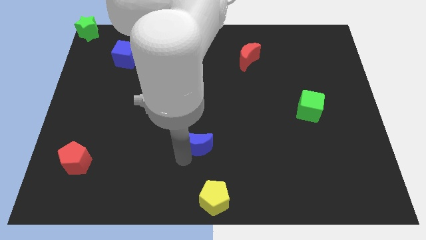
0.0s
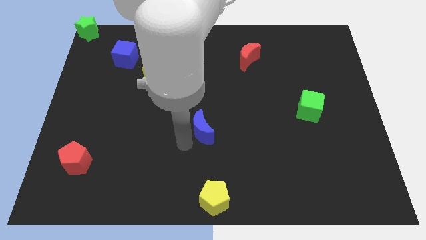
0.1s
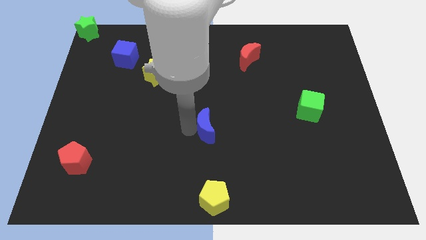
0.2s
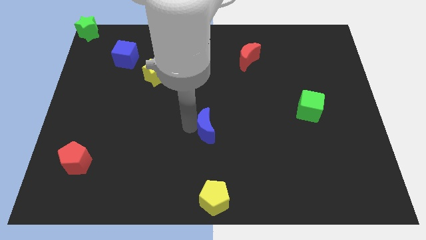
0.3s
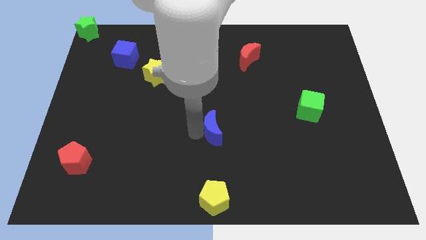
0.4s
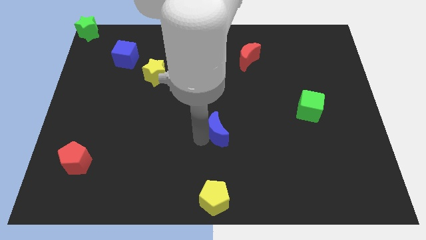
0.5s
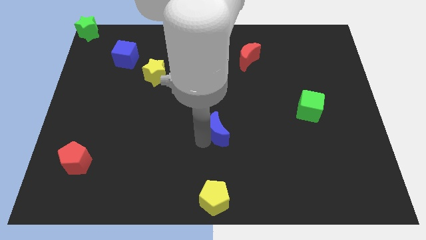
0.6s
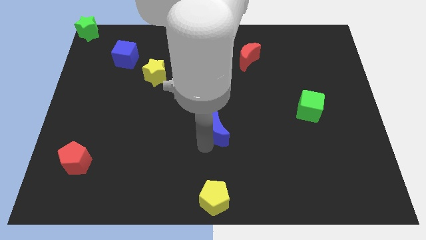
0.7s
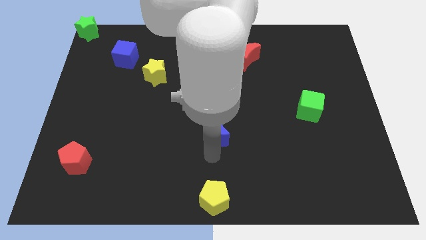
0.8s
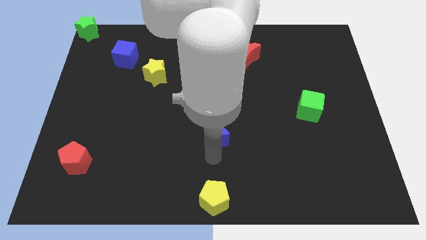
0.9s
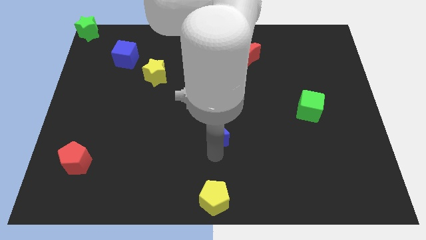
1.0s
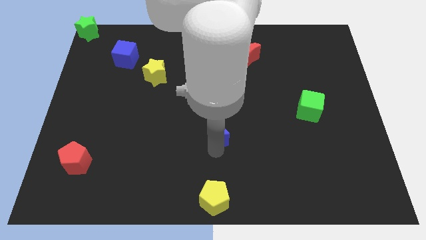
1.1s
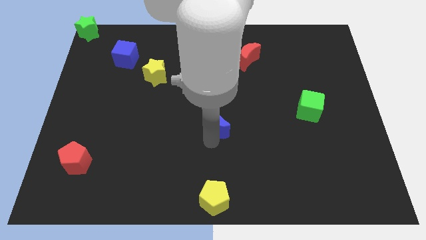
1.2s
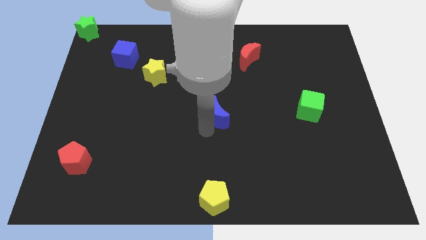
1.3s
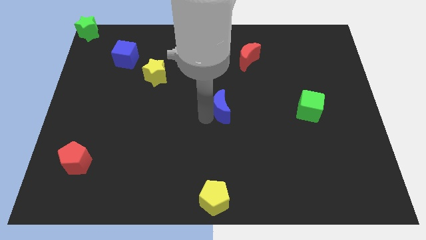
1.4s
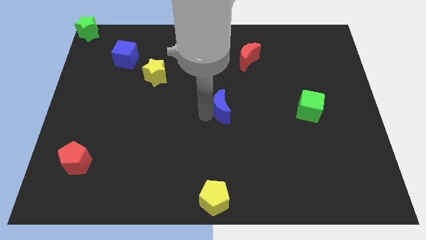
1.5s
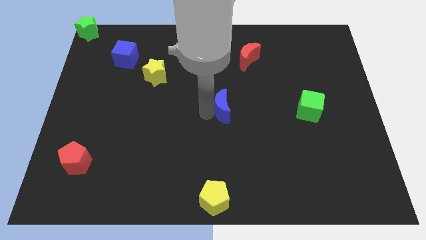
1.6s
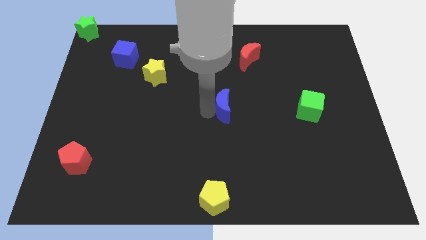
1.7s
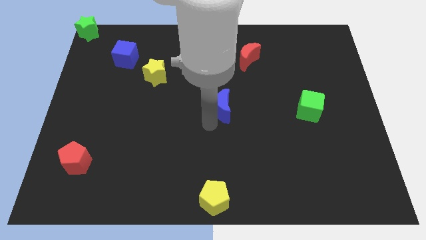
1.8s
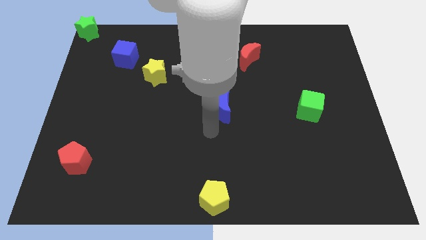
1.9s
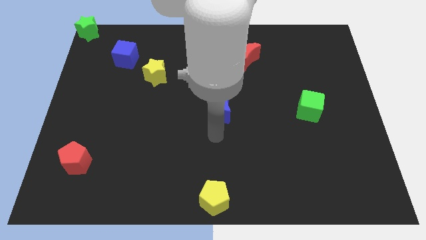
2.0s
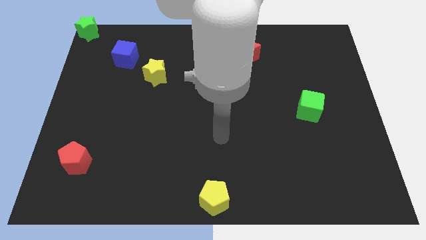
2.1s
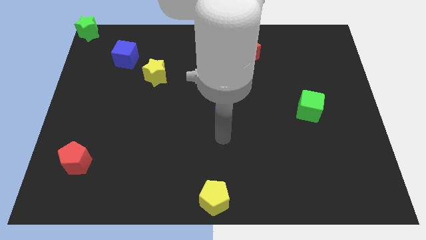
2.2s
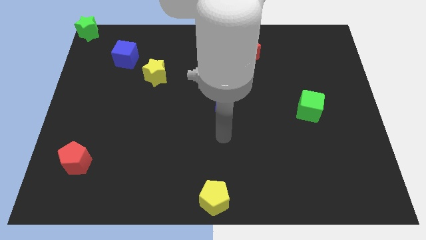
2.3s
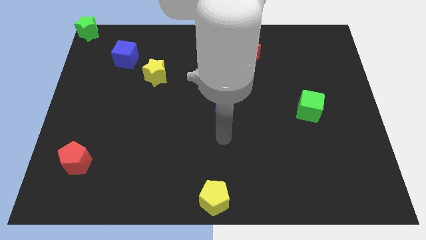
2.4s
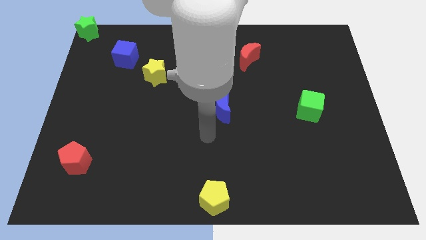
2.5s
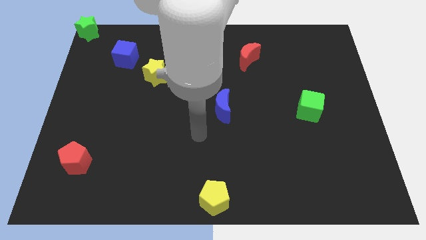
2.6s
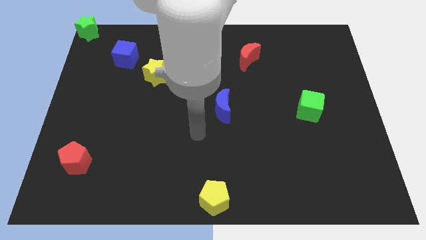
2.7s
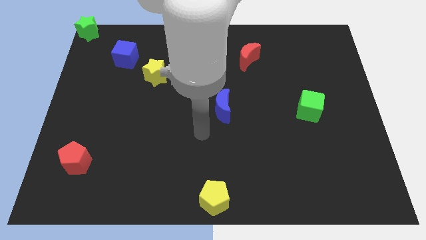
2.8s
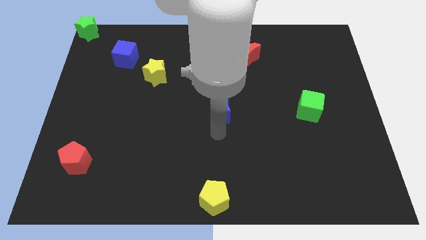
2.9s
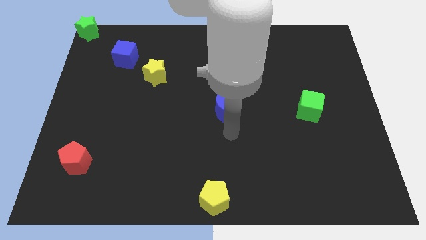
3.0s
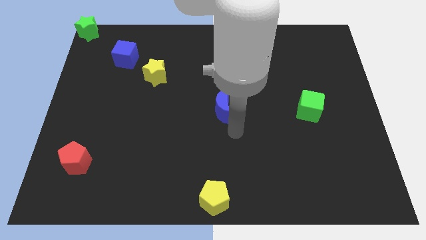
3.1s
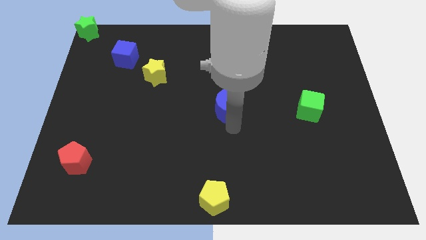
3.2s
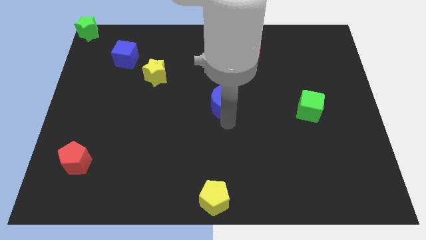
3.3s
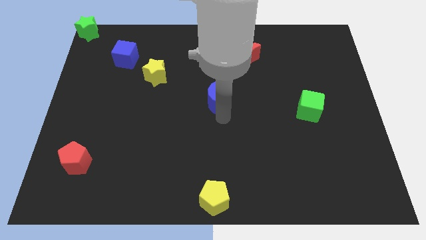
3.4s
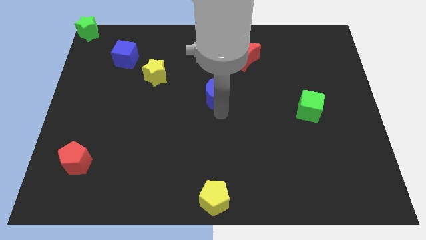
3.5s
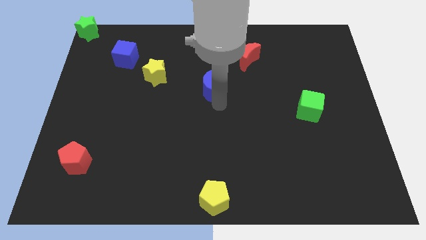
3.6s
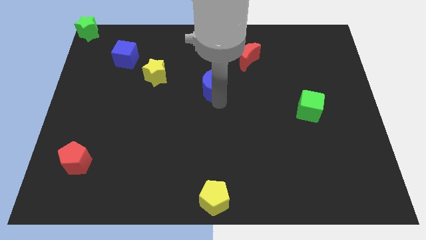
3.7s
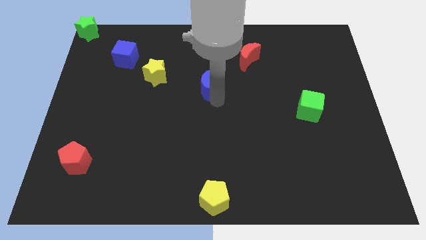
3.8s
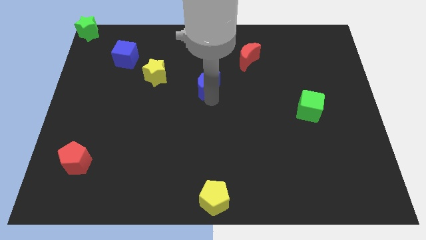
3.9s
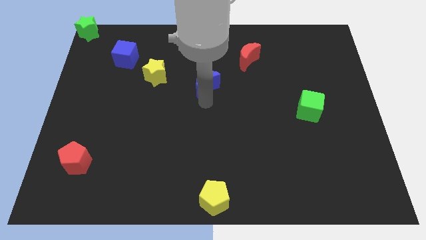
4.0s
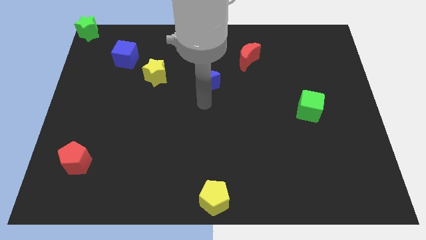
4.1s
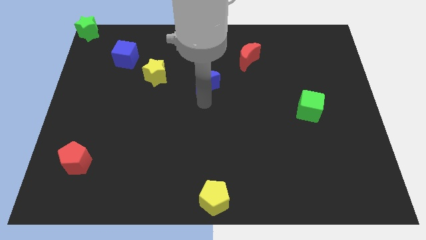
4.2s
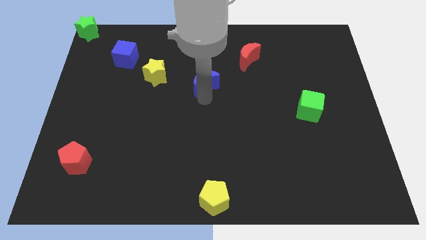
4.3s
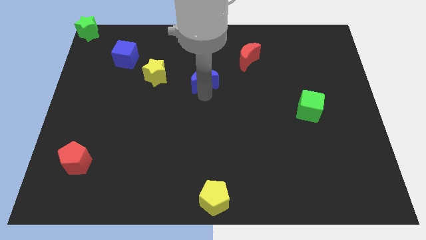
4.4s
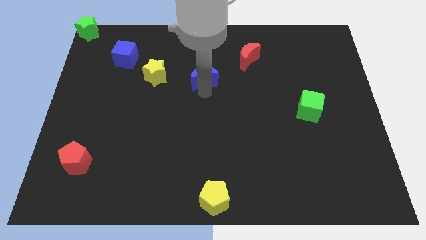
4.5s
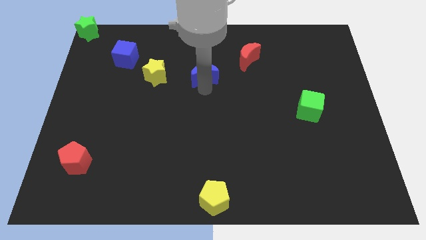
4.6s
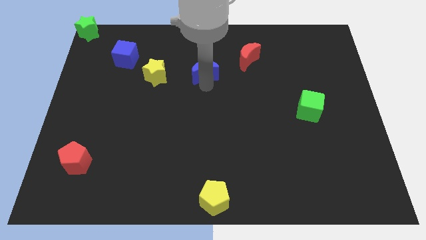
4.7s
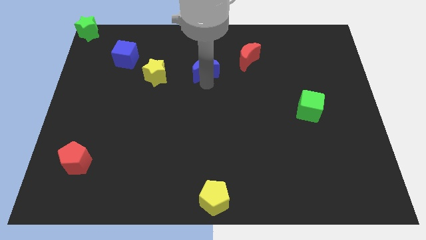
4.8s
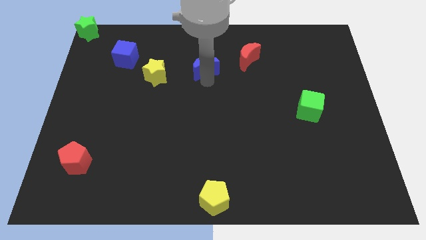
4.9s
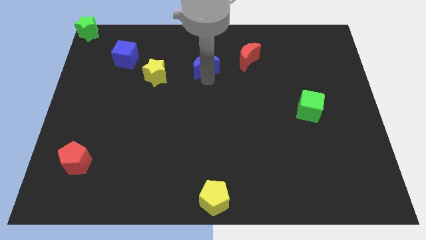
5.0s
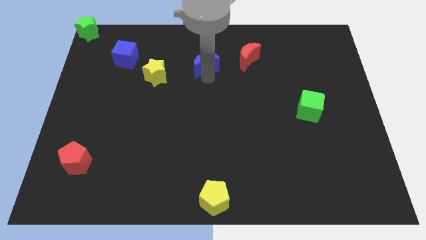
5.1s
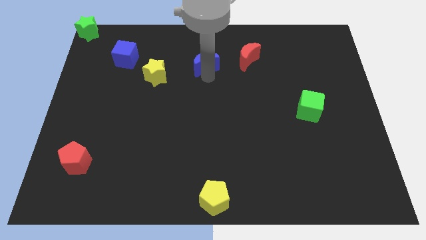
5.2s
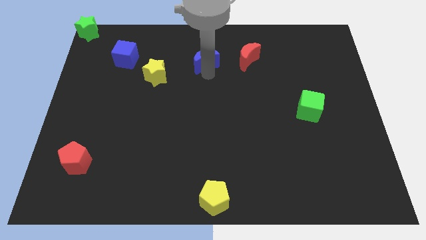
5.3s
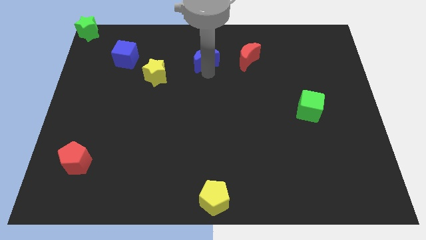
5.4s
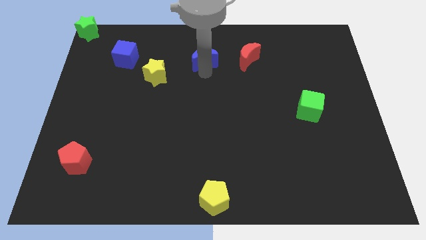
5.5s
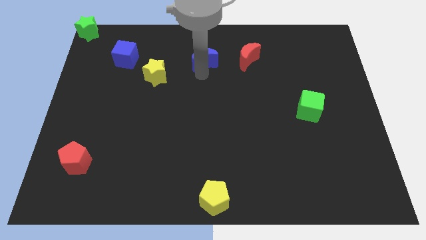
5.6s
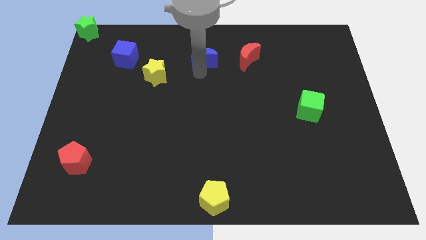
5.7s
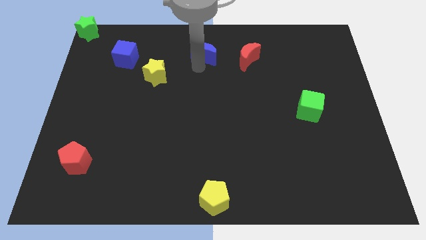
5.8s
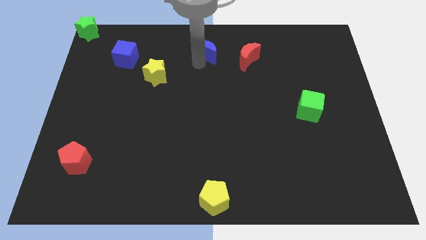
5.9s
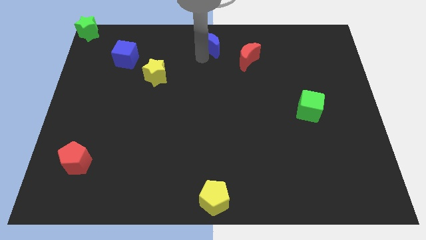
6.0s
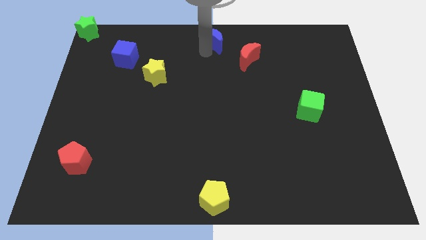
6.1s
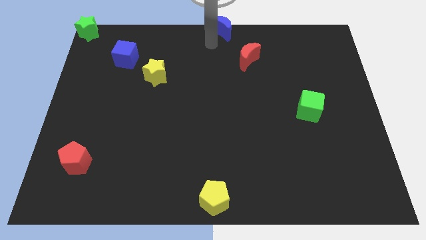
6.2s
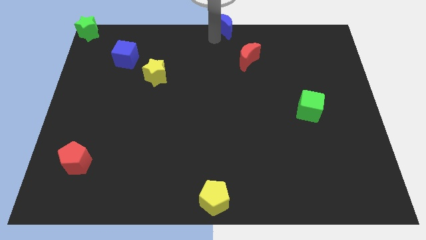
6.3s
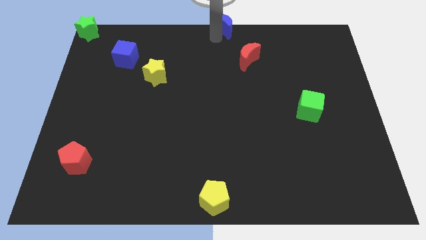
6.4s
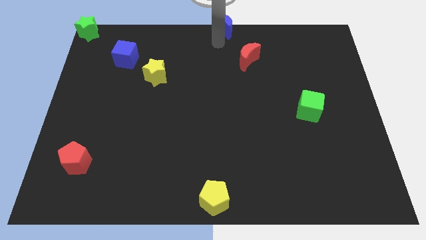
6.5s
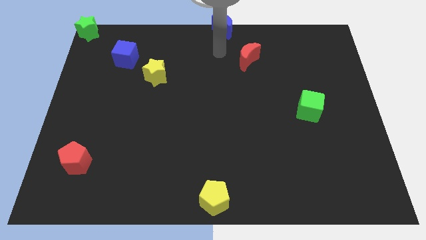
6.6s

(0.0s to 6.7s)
push the blue crescent at the top center of the board

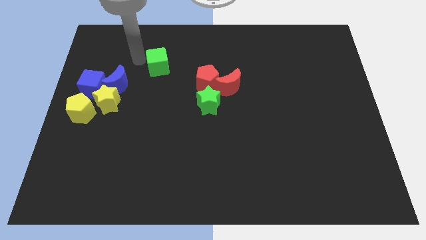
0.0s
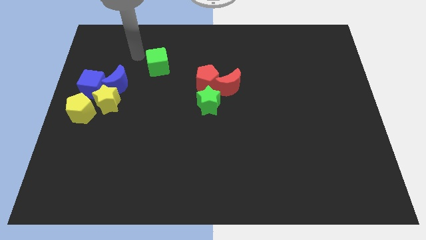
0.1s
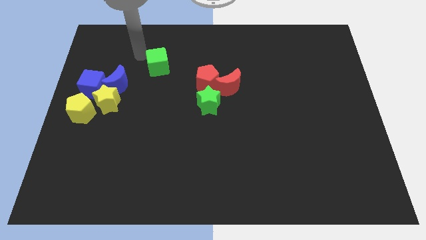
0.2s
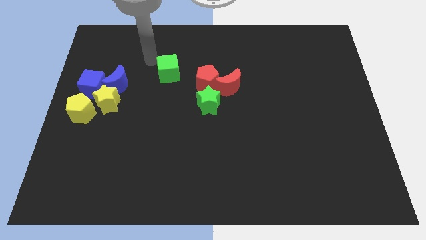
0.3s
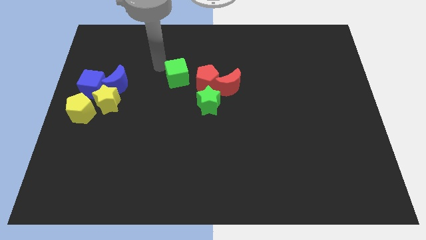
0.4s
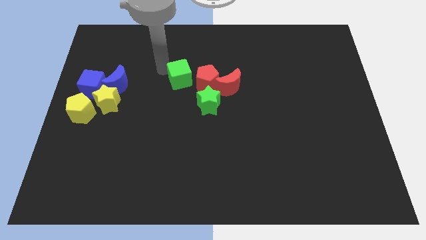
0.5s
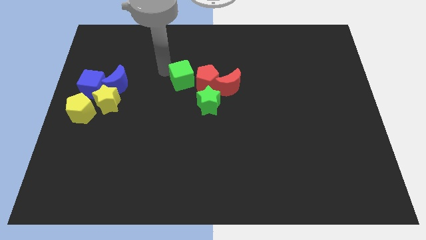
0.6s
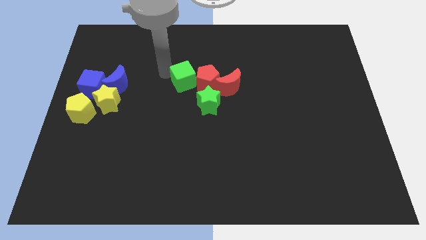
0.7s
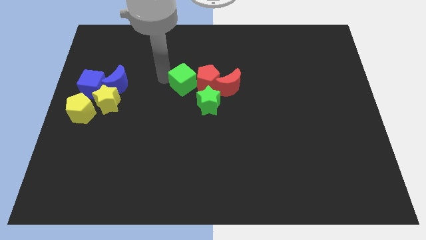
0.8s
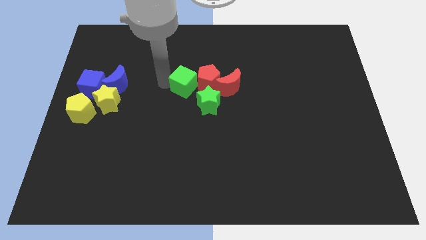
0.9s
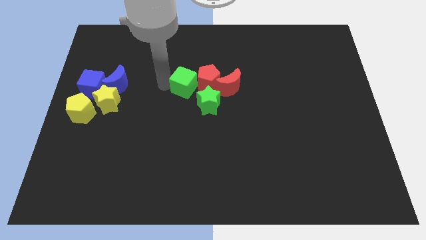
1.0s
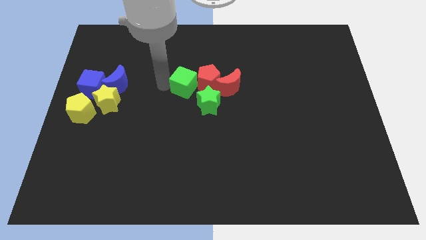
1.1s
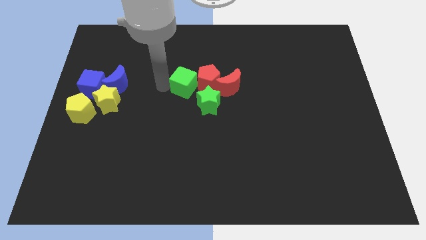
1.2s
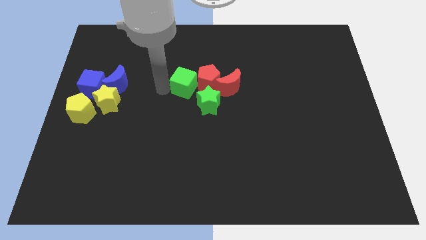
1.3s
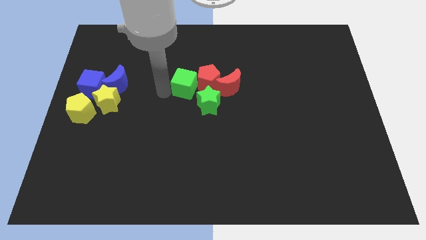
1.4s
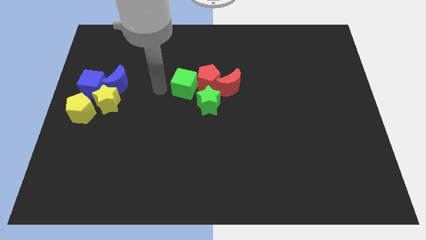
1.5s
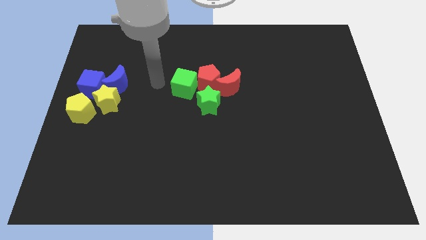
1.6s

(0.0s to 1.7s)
move the green cube left to the red pentagon

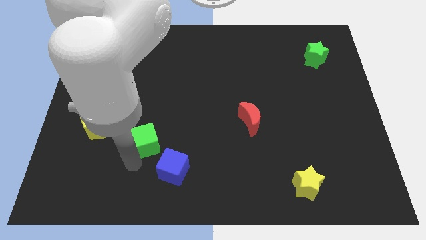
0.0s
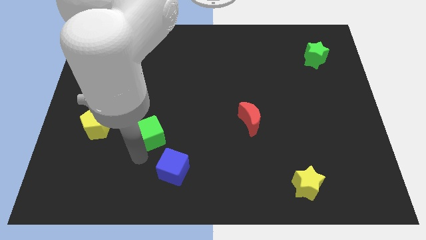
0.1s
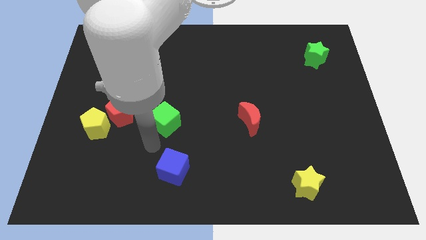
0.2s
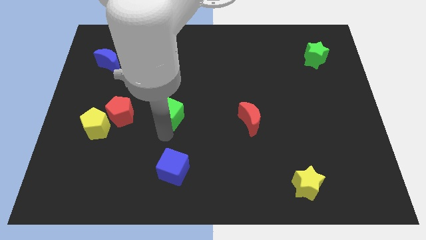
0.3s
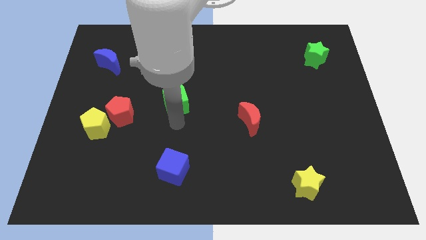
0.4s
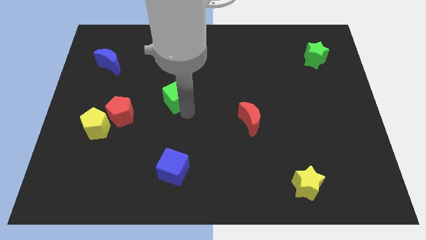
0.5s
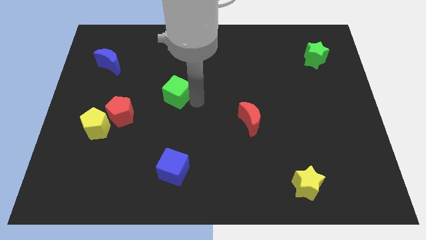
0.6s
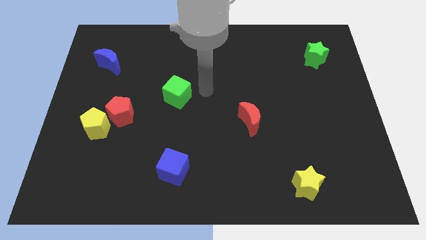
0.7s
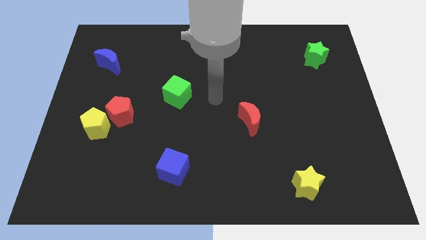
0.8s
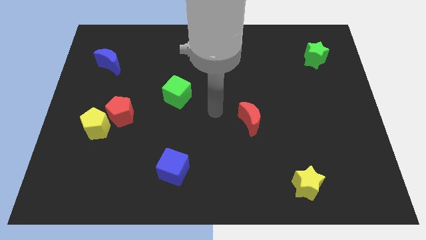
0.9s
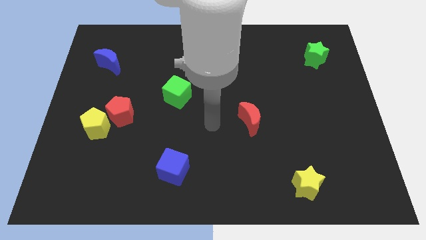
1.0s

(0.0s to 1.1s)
push green cube above the blue cube
